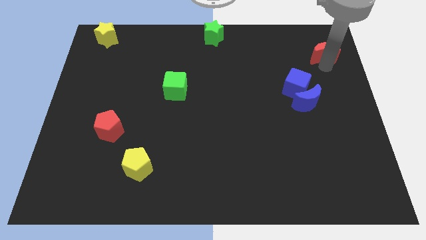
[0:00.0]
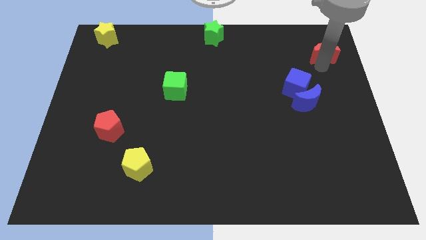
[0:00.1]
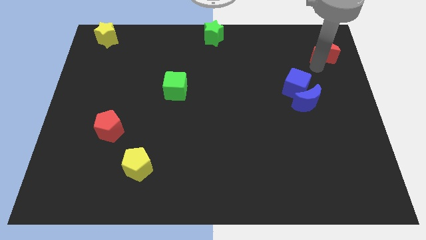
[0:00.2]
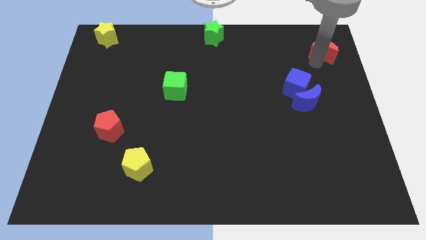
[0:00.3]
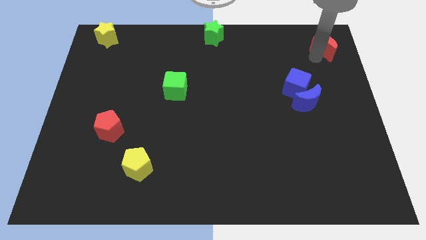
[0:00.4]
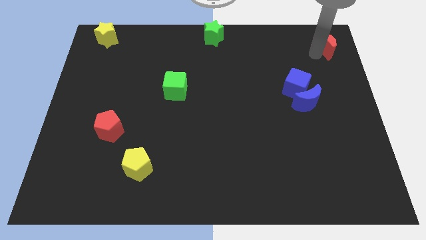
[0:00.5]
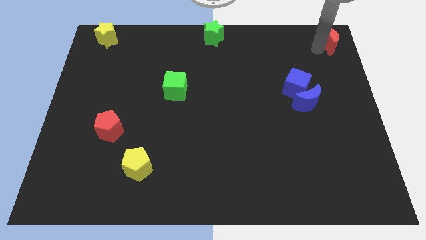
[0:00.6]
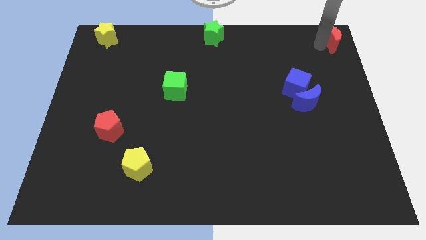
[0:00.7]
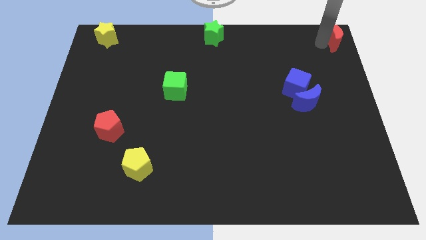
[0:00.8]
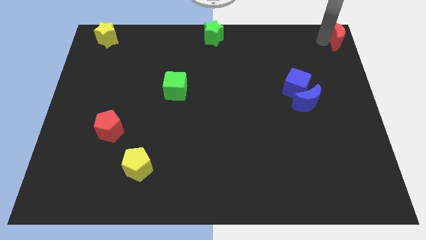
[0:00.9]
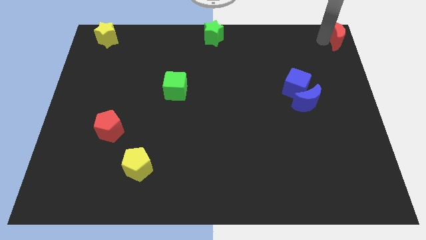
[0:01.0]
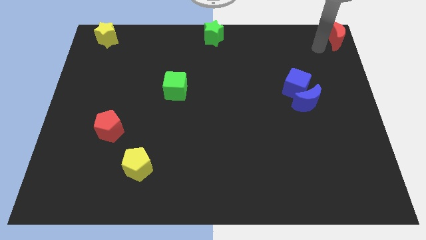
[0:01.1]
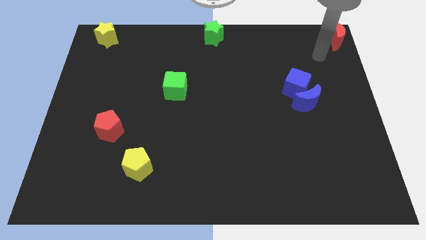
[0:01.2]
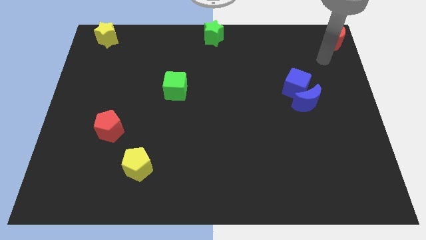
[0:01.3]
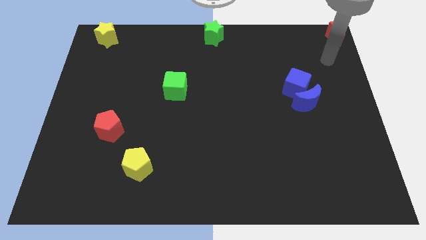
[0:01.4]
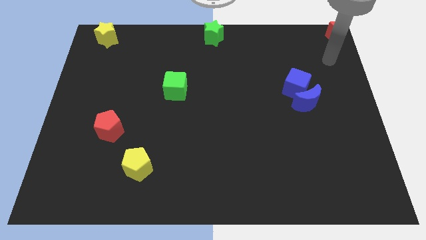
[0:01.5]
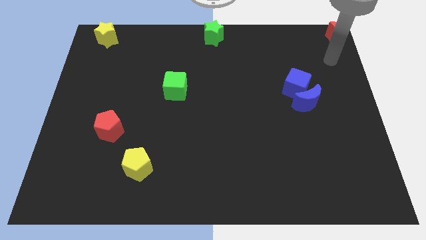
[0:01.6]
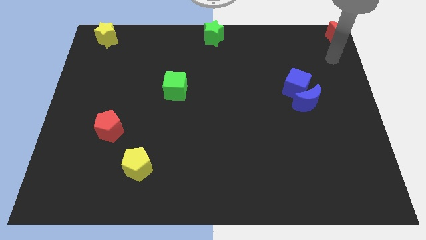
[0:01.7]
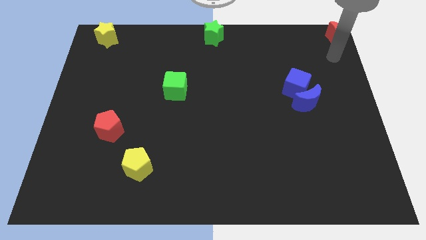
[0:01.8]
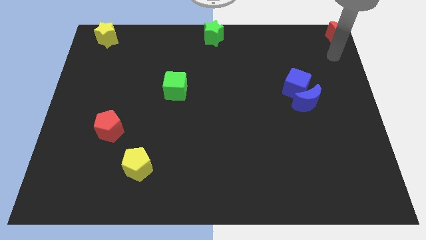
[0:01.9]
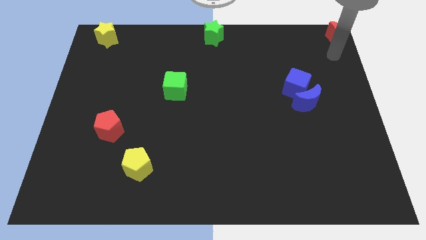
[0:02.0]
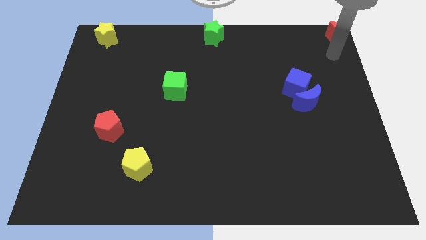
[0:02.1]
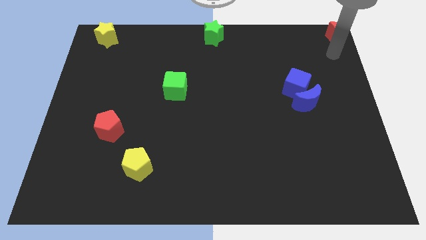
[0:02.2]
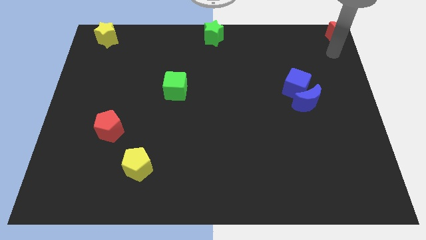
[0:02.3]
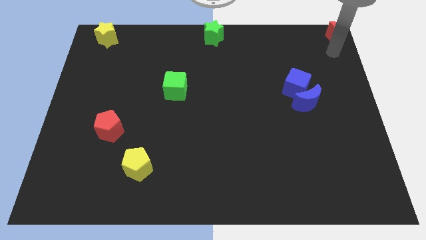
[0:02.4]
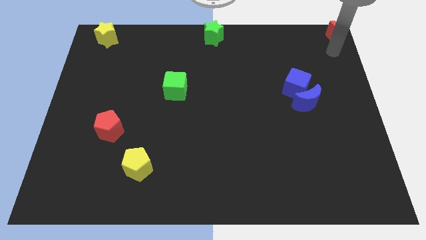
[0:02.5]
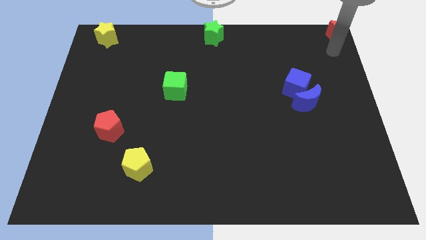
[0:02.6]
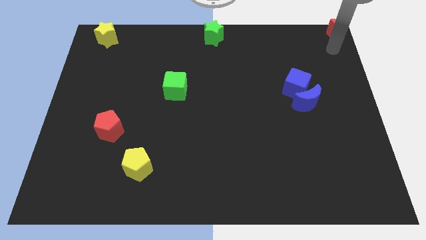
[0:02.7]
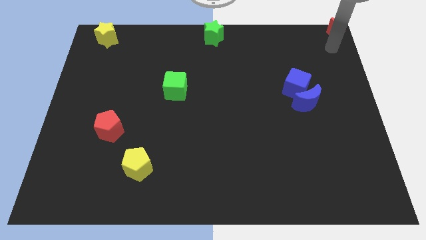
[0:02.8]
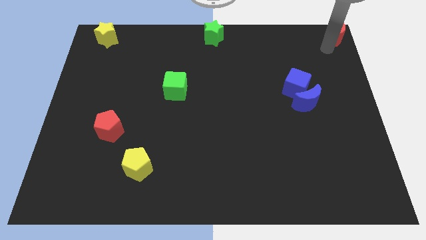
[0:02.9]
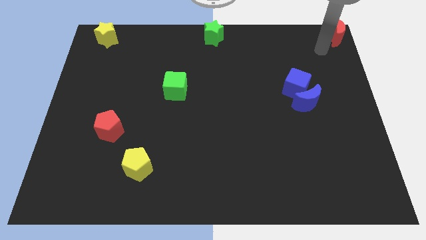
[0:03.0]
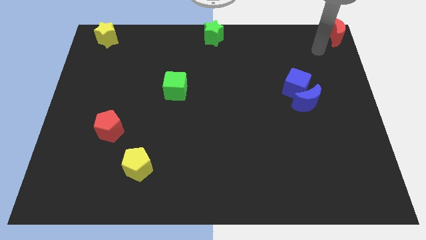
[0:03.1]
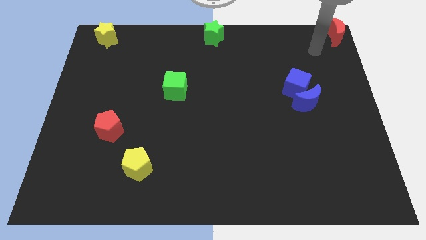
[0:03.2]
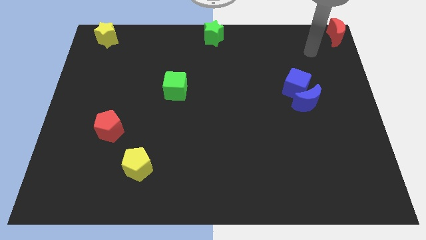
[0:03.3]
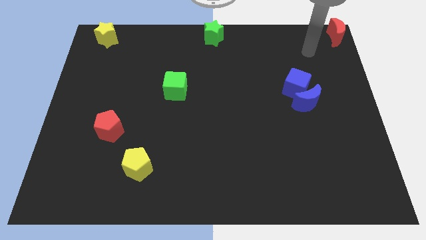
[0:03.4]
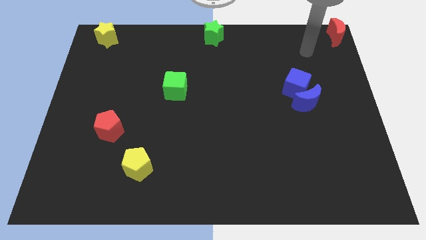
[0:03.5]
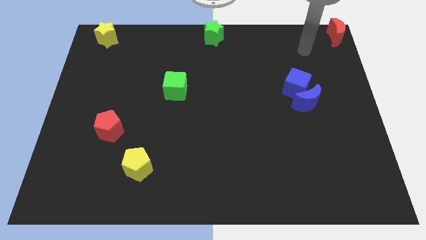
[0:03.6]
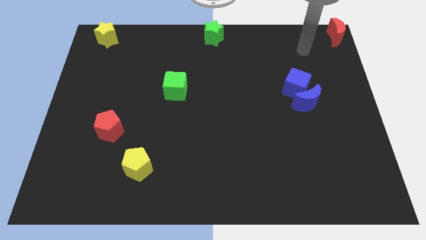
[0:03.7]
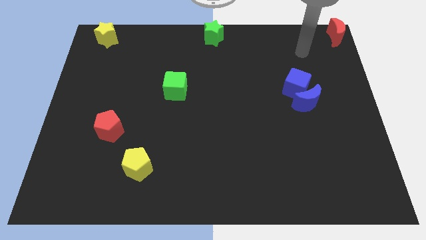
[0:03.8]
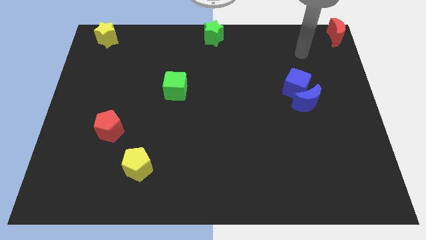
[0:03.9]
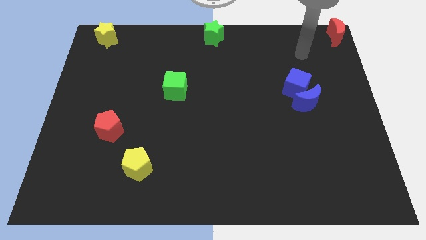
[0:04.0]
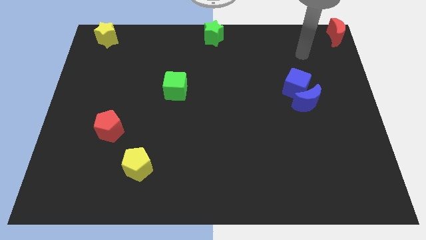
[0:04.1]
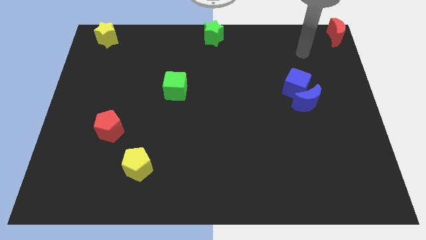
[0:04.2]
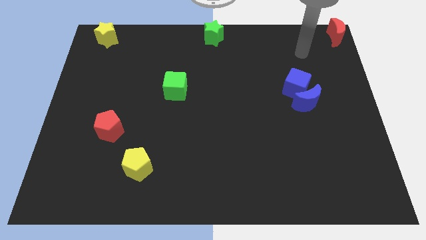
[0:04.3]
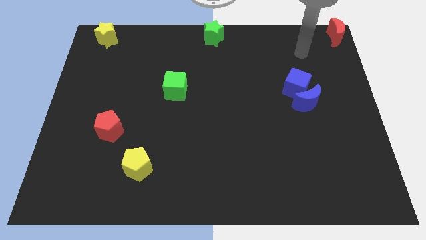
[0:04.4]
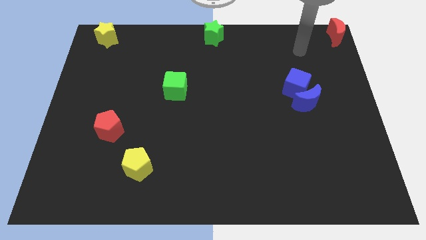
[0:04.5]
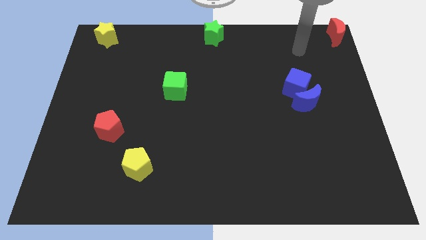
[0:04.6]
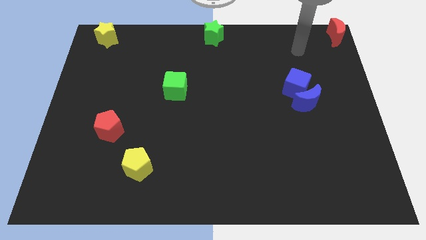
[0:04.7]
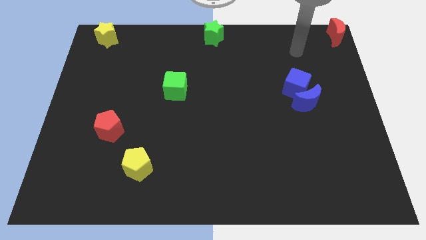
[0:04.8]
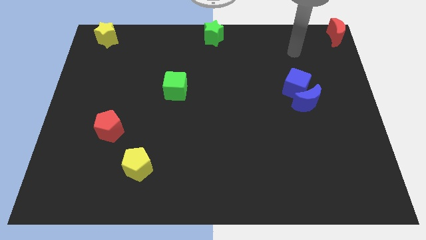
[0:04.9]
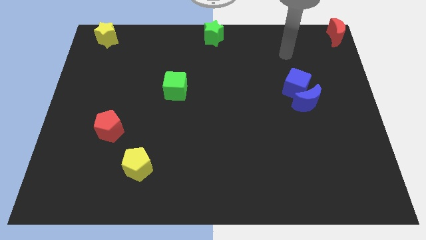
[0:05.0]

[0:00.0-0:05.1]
place the red crescent at the top right of the board

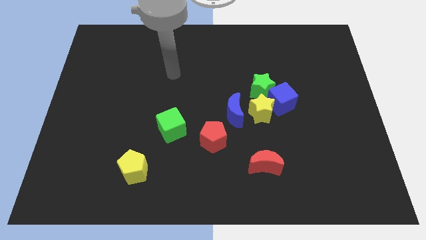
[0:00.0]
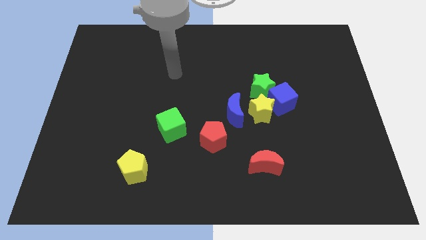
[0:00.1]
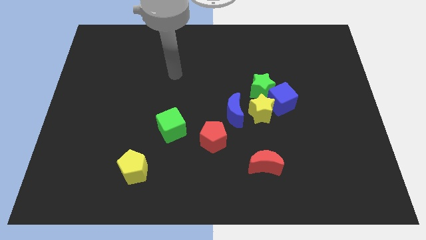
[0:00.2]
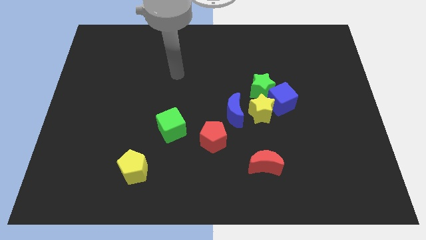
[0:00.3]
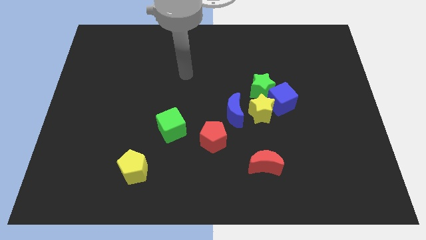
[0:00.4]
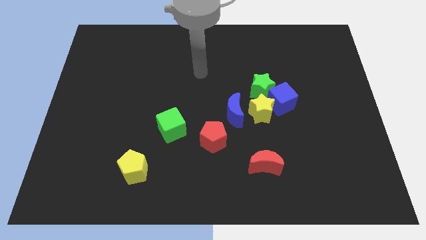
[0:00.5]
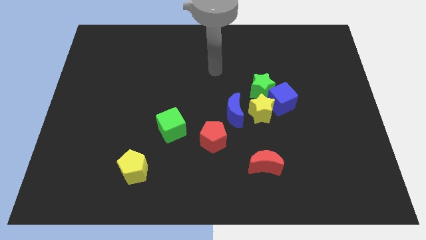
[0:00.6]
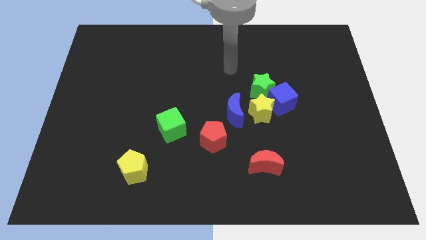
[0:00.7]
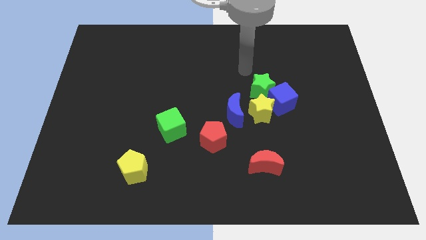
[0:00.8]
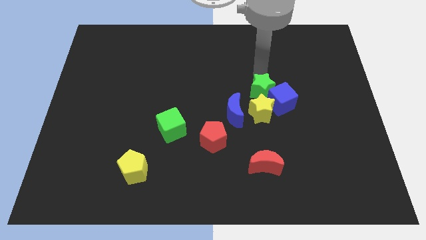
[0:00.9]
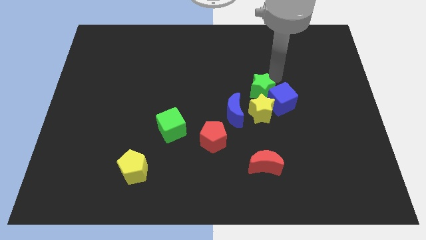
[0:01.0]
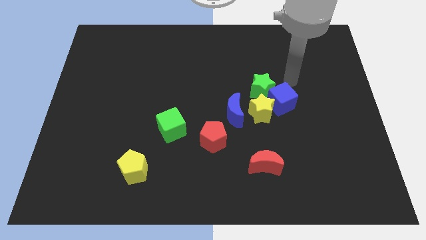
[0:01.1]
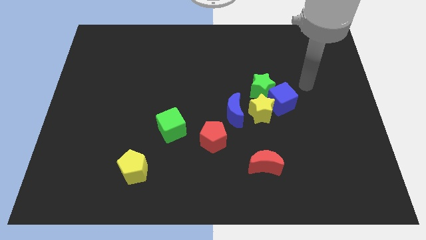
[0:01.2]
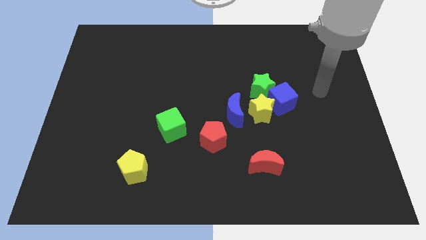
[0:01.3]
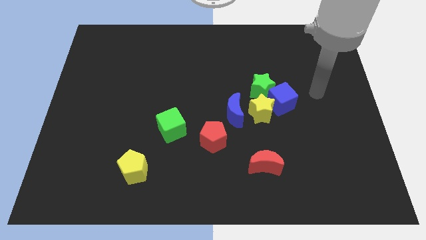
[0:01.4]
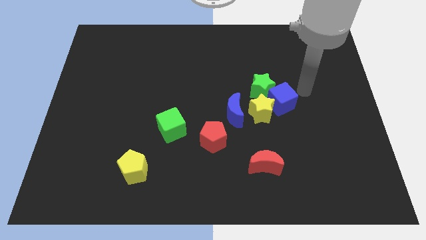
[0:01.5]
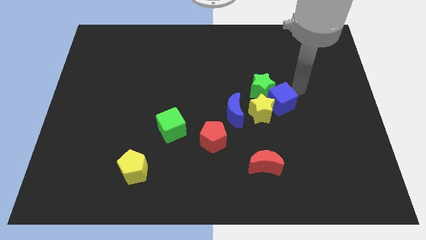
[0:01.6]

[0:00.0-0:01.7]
place your arm right to blue cube

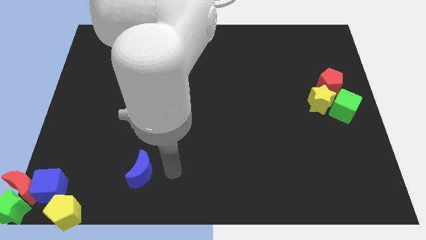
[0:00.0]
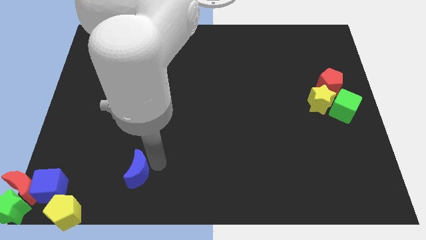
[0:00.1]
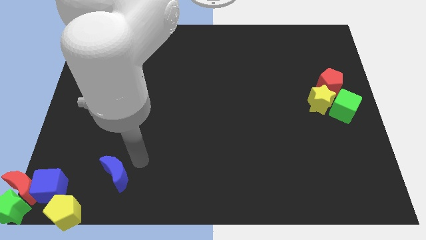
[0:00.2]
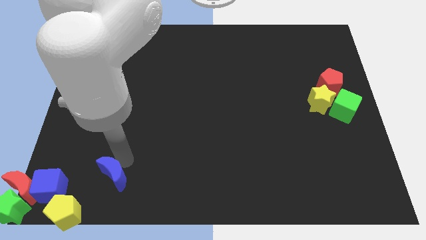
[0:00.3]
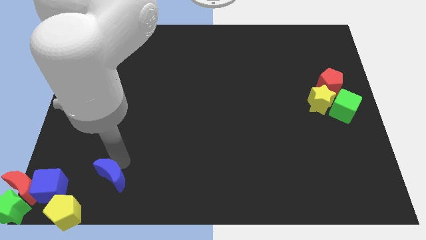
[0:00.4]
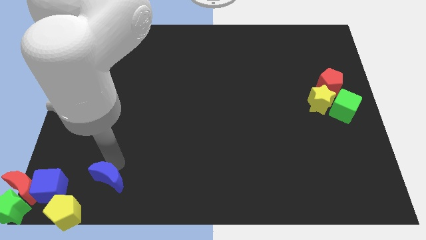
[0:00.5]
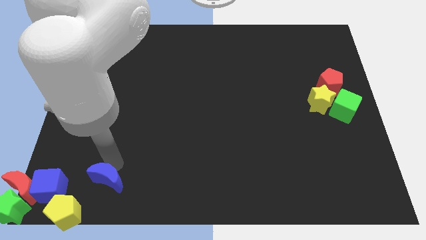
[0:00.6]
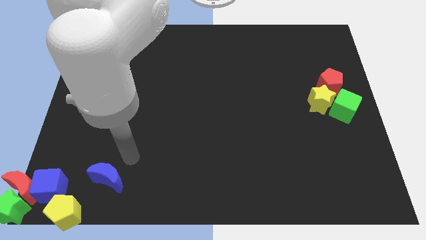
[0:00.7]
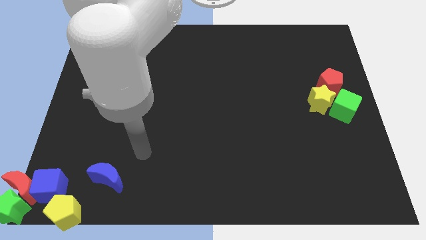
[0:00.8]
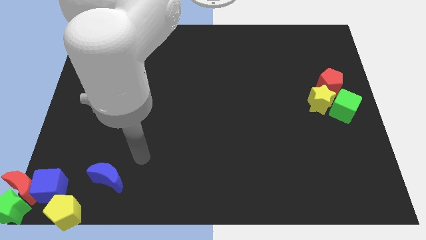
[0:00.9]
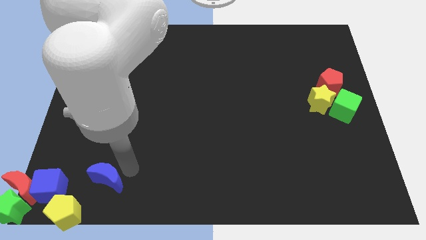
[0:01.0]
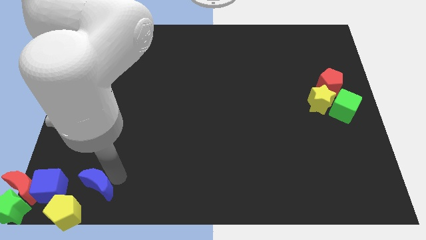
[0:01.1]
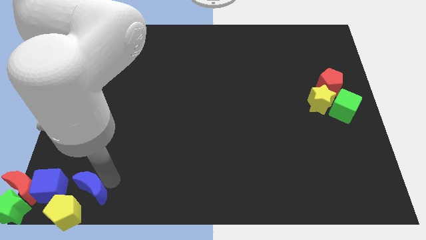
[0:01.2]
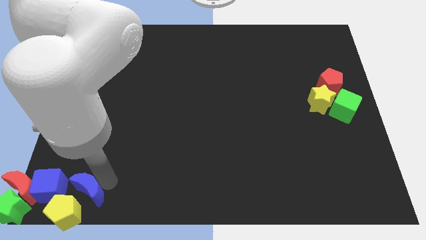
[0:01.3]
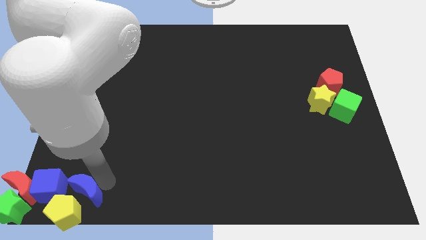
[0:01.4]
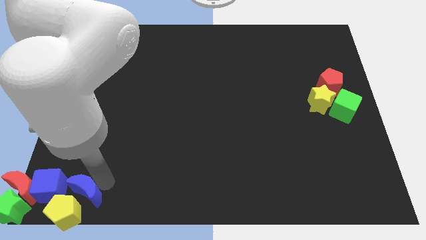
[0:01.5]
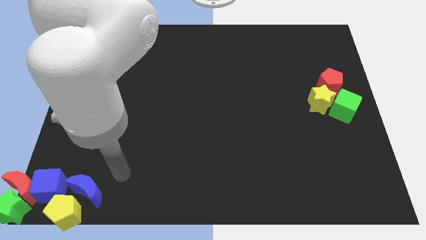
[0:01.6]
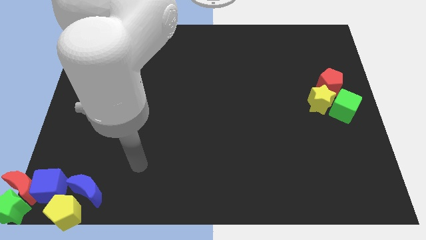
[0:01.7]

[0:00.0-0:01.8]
place blue crescent above yellow pentagon

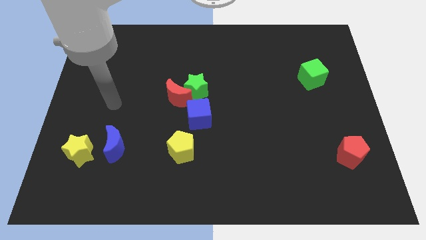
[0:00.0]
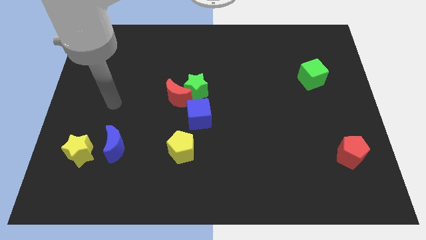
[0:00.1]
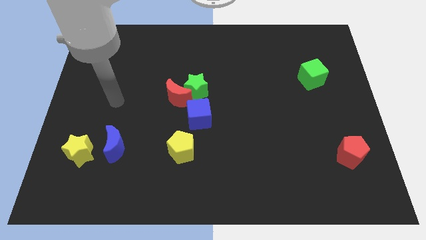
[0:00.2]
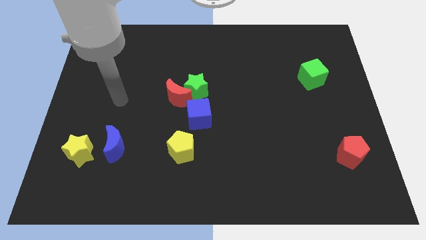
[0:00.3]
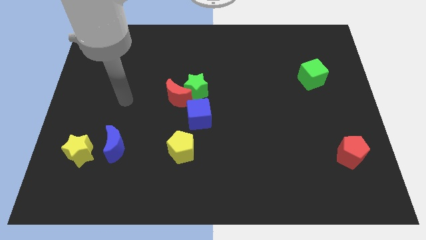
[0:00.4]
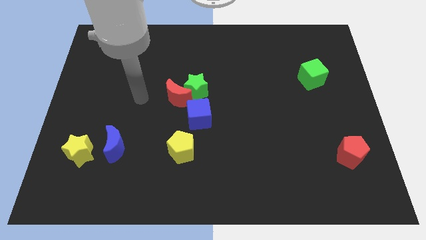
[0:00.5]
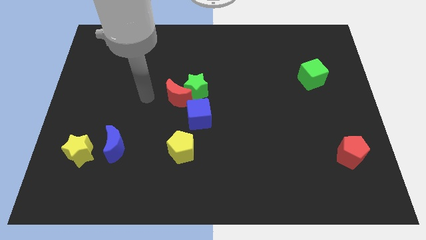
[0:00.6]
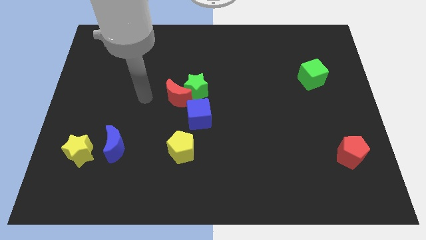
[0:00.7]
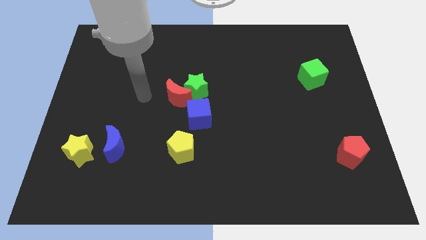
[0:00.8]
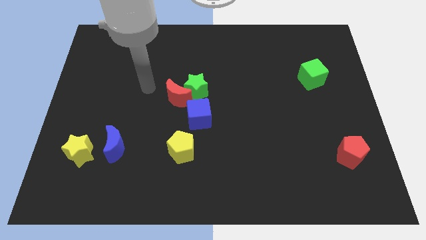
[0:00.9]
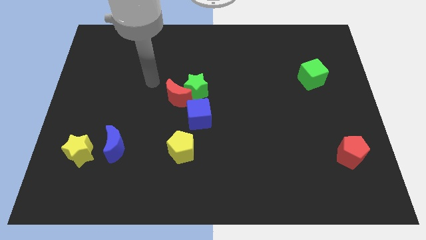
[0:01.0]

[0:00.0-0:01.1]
move your arm to the top left of red crescent
